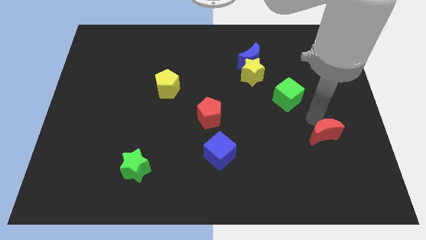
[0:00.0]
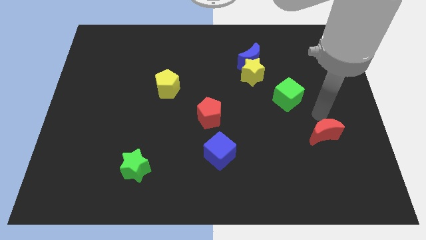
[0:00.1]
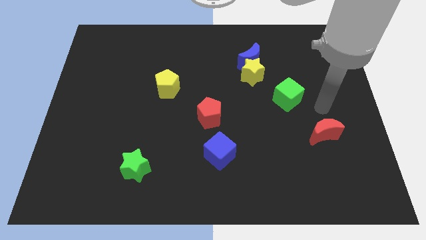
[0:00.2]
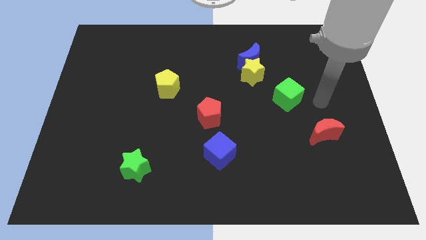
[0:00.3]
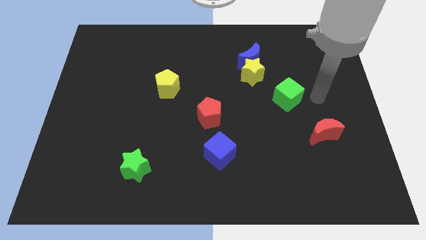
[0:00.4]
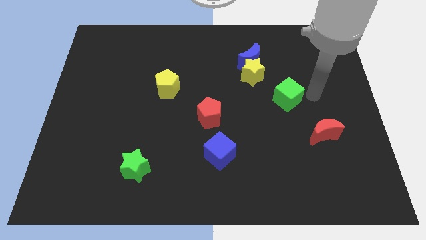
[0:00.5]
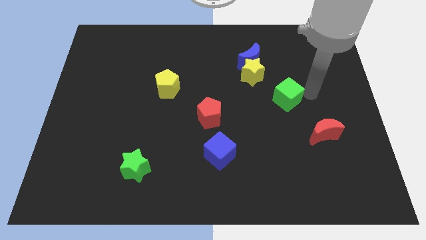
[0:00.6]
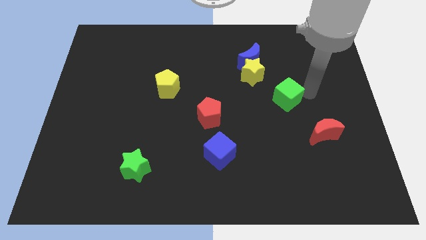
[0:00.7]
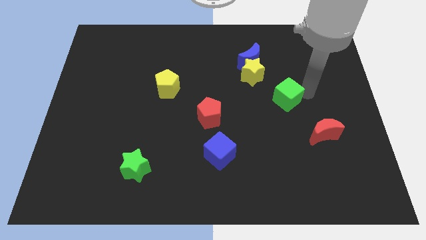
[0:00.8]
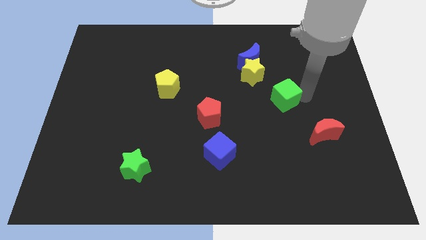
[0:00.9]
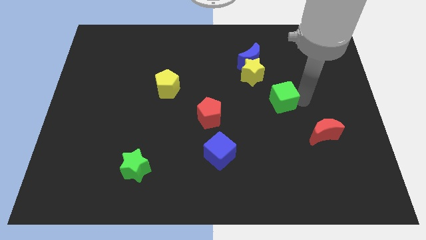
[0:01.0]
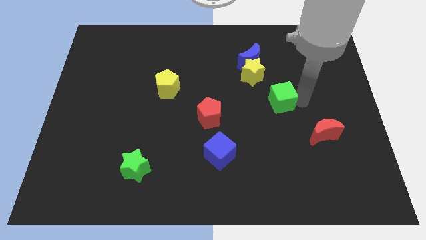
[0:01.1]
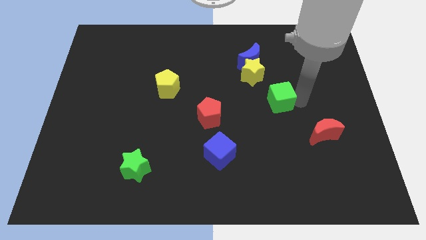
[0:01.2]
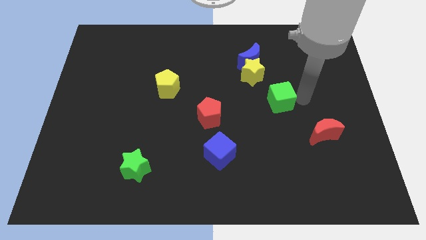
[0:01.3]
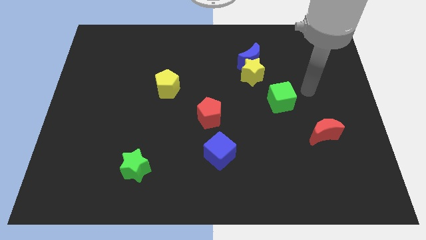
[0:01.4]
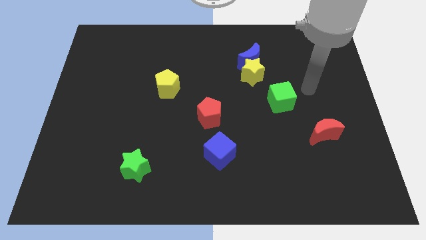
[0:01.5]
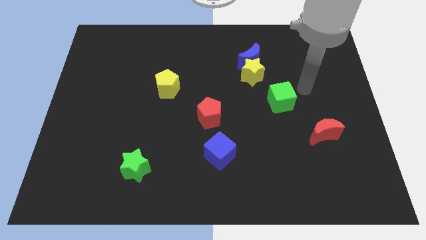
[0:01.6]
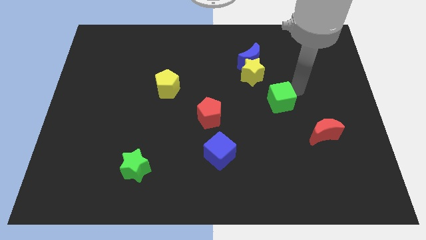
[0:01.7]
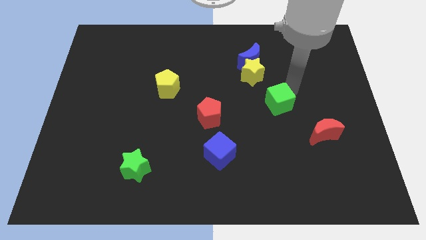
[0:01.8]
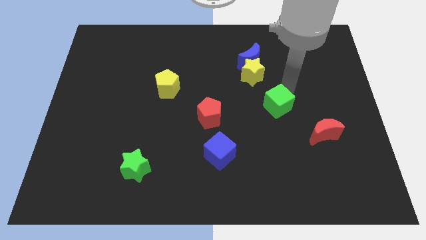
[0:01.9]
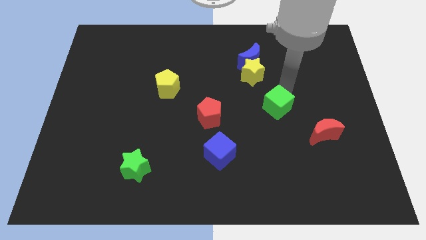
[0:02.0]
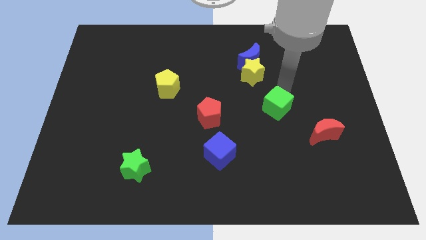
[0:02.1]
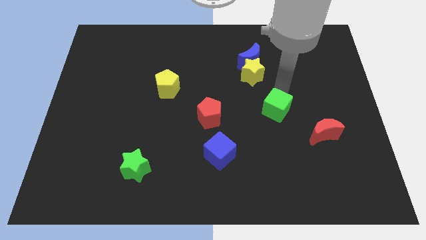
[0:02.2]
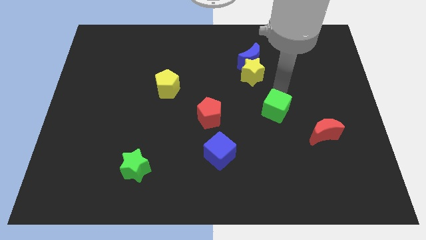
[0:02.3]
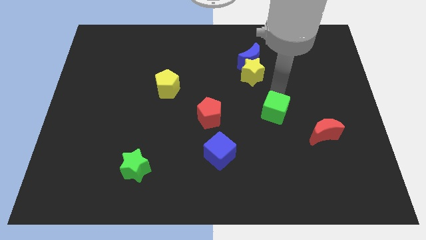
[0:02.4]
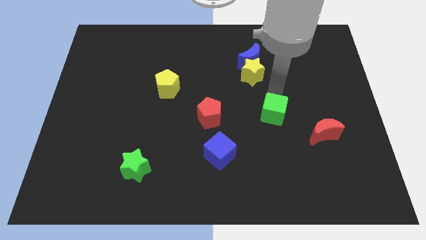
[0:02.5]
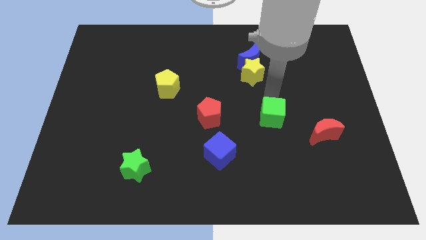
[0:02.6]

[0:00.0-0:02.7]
place the green cube parallel to red pentagon

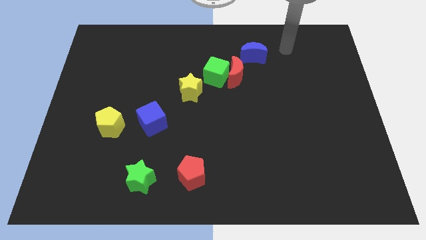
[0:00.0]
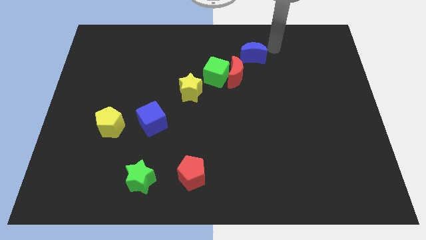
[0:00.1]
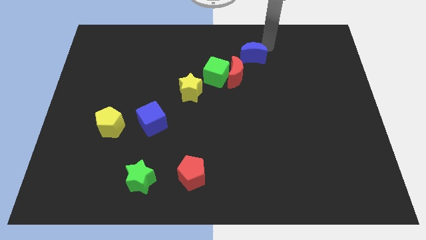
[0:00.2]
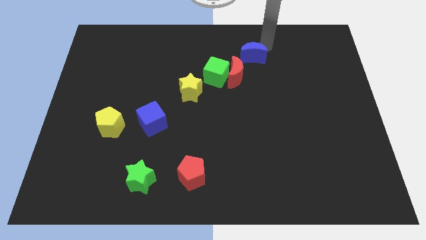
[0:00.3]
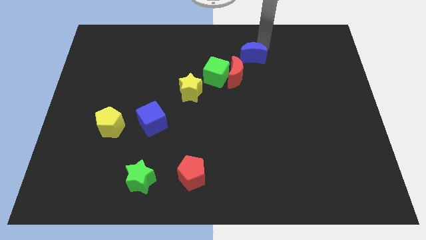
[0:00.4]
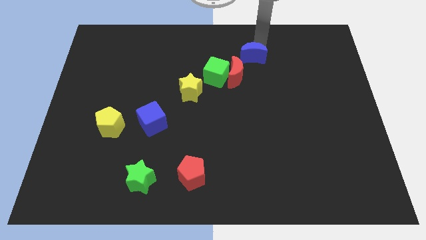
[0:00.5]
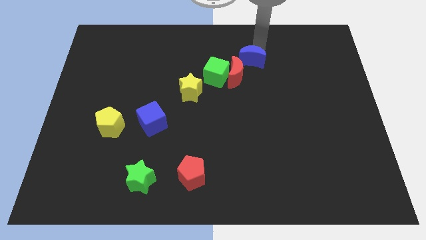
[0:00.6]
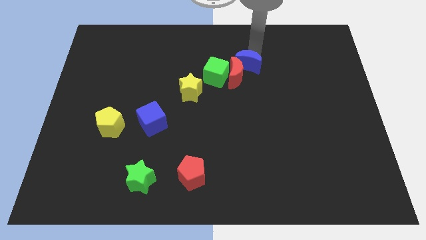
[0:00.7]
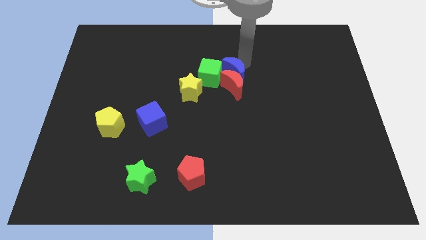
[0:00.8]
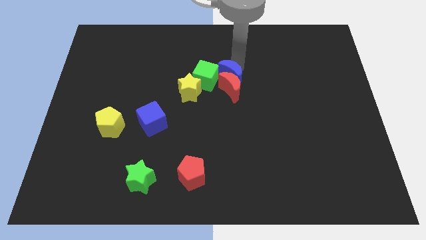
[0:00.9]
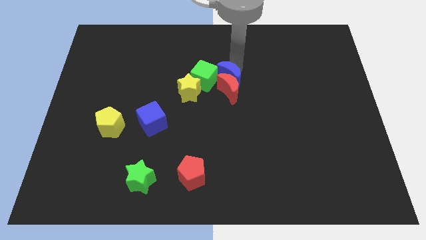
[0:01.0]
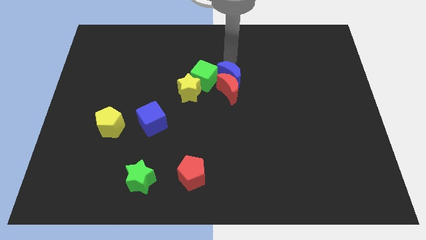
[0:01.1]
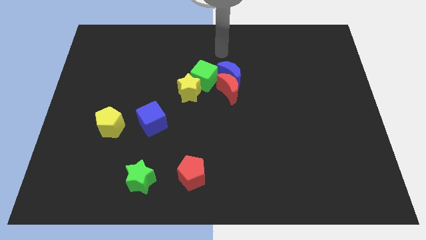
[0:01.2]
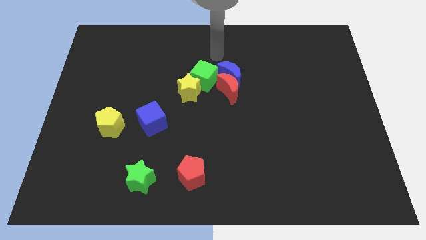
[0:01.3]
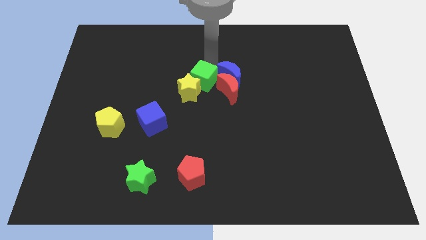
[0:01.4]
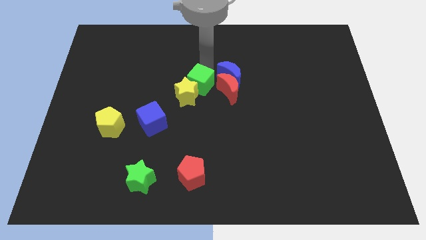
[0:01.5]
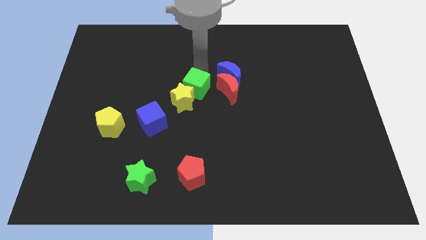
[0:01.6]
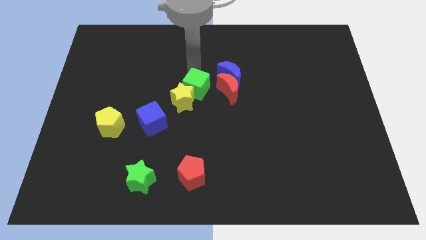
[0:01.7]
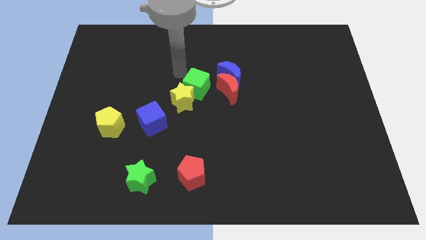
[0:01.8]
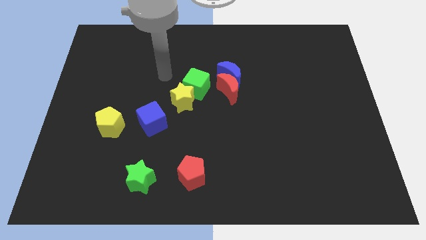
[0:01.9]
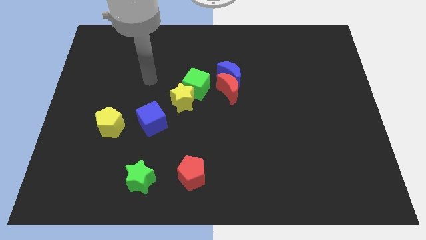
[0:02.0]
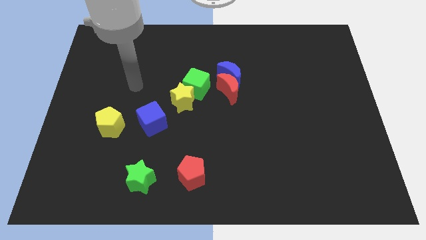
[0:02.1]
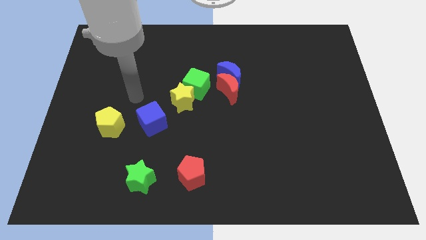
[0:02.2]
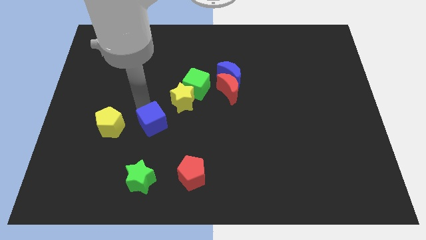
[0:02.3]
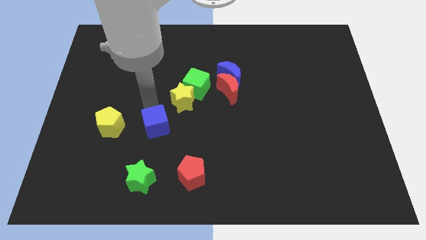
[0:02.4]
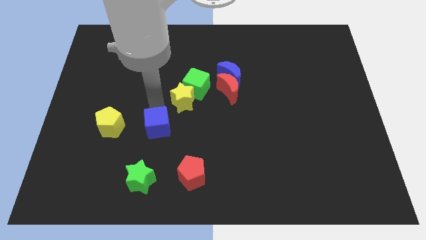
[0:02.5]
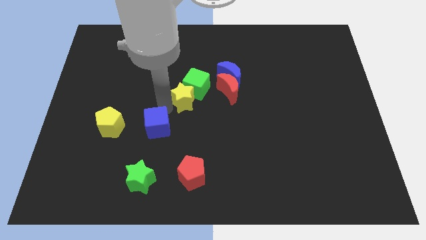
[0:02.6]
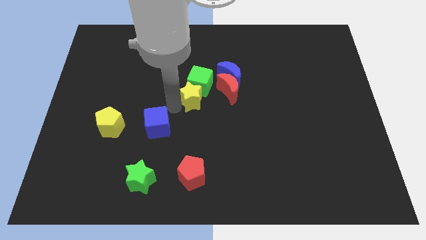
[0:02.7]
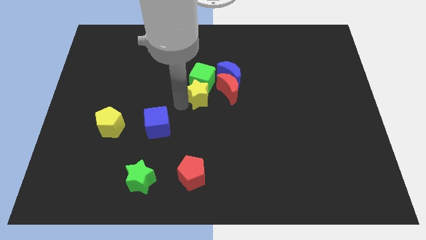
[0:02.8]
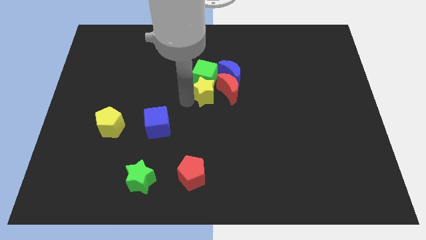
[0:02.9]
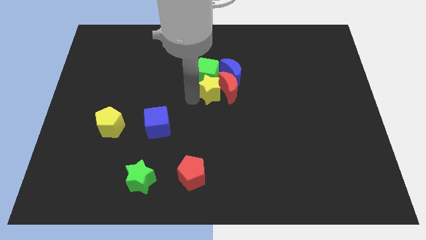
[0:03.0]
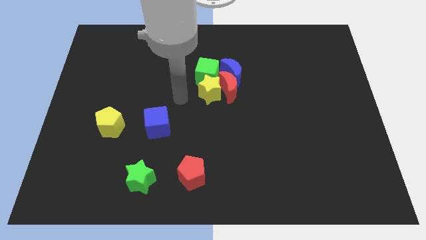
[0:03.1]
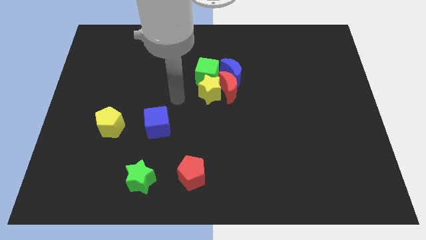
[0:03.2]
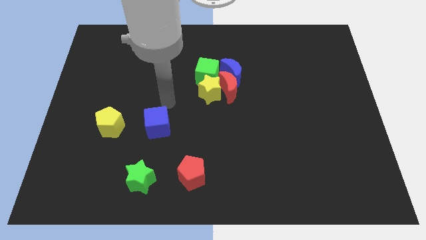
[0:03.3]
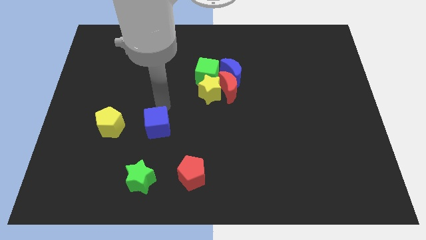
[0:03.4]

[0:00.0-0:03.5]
place crescent green cube and yellow star at center

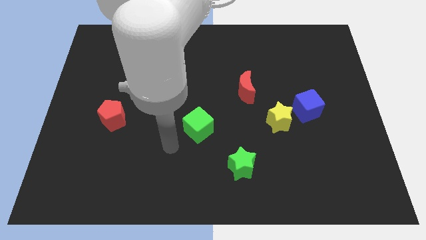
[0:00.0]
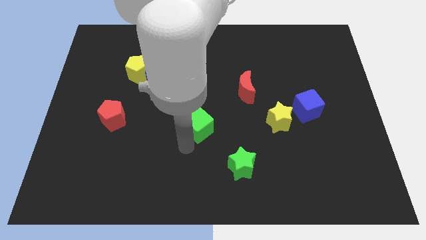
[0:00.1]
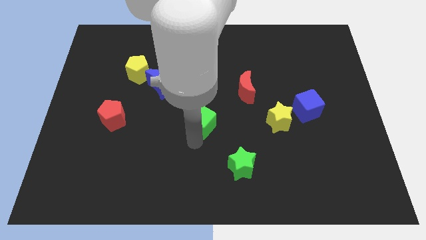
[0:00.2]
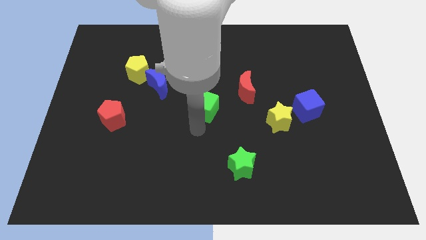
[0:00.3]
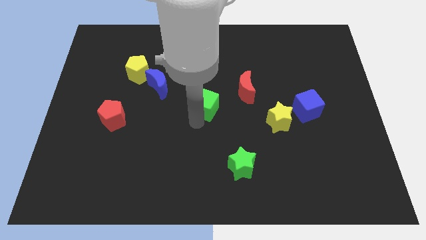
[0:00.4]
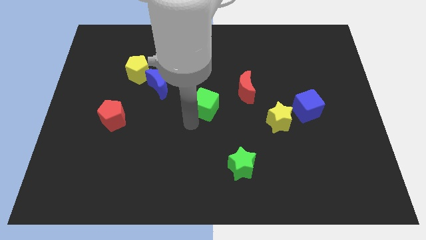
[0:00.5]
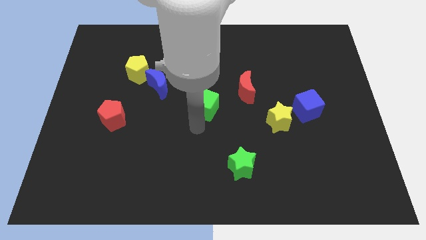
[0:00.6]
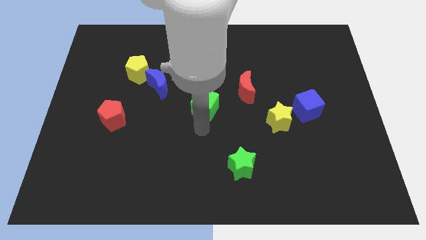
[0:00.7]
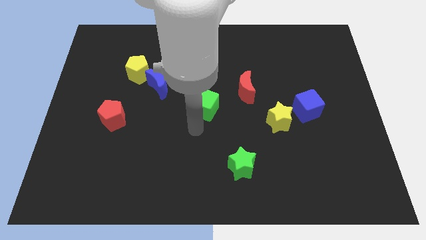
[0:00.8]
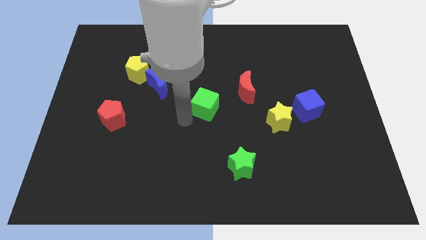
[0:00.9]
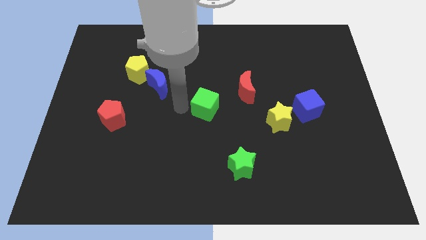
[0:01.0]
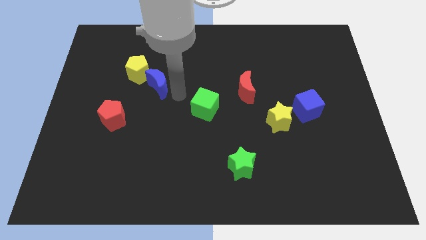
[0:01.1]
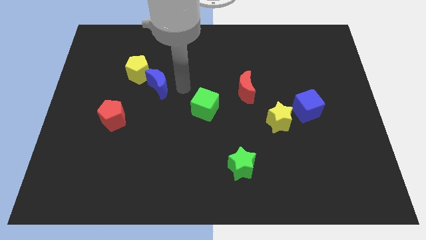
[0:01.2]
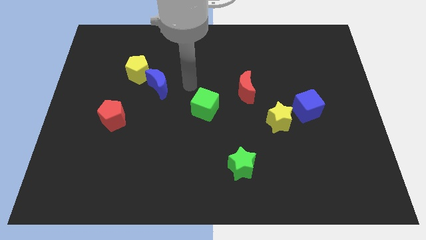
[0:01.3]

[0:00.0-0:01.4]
move the green cube to the center of the board

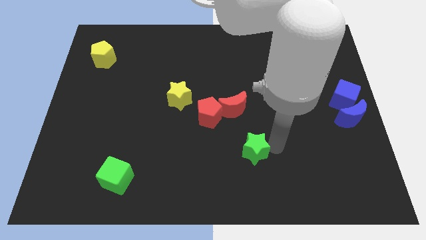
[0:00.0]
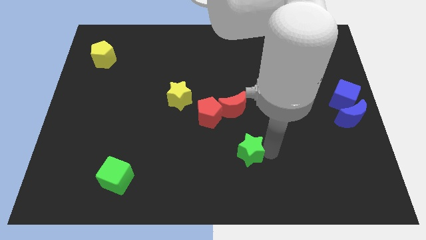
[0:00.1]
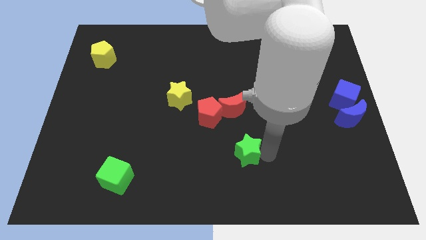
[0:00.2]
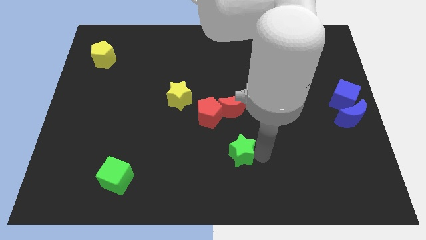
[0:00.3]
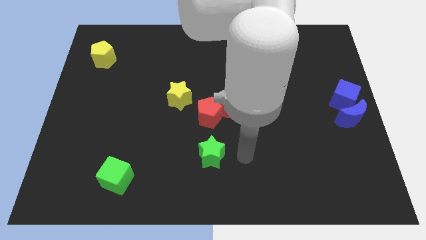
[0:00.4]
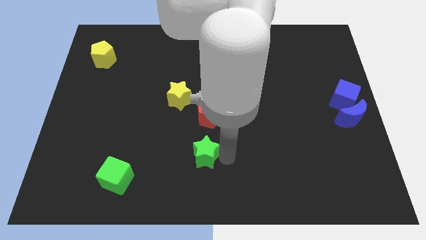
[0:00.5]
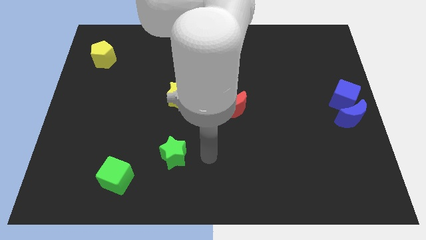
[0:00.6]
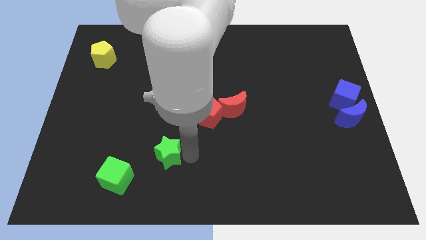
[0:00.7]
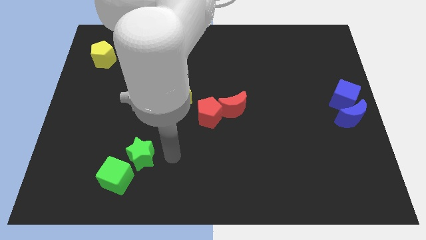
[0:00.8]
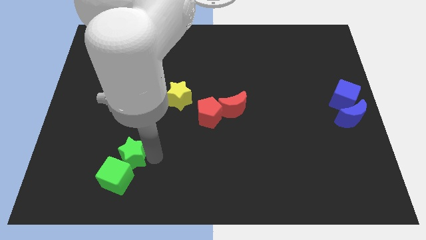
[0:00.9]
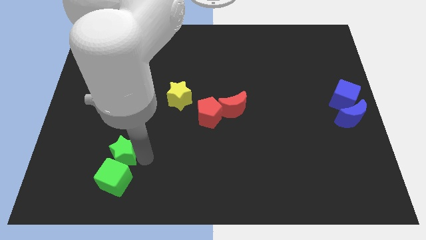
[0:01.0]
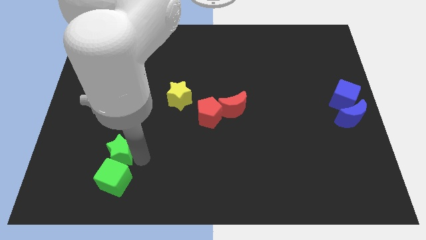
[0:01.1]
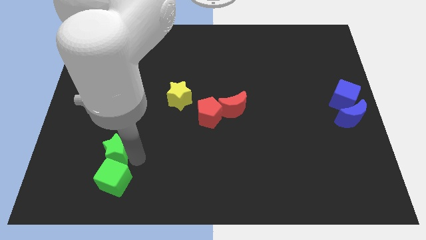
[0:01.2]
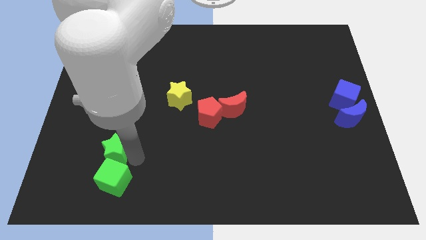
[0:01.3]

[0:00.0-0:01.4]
place the green star above the green cube
